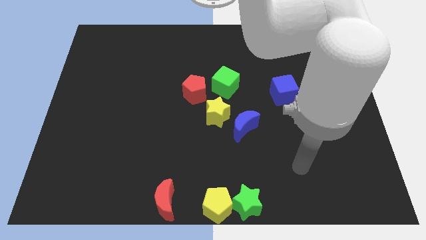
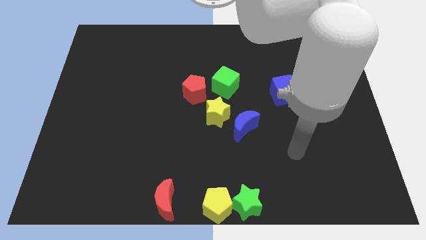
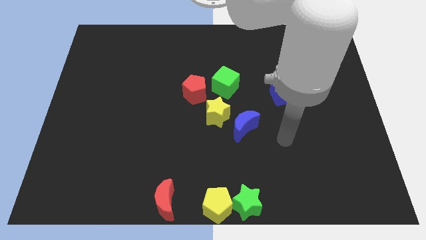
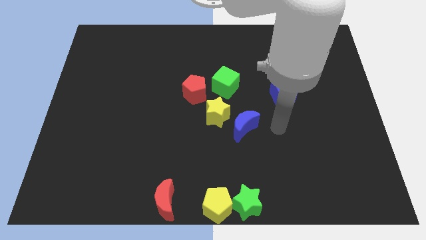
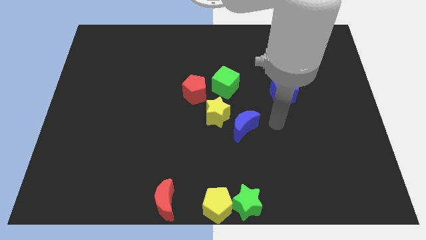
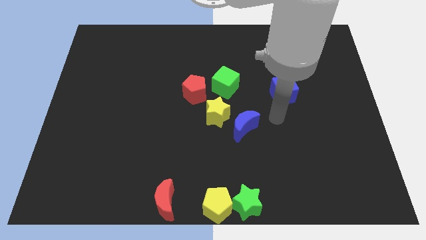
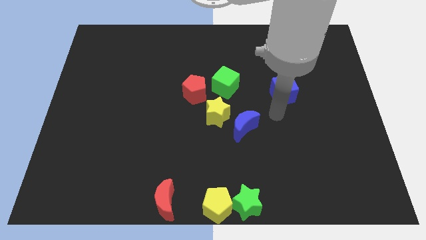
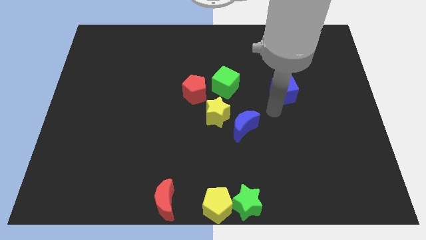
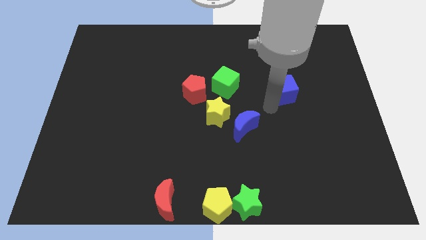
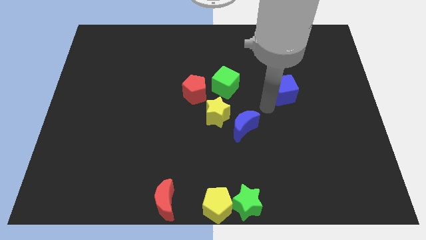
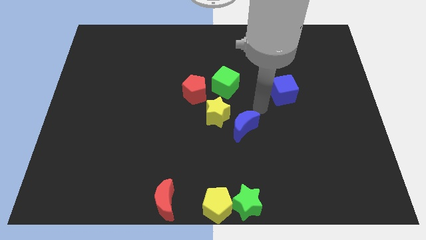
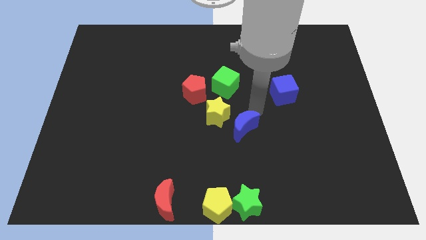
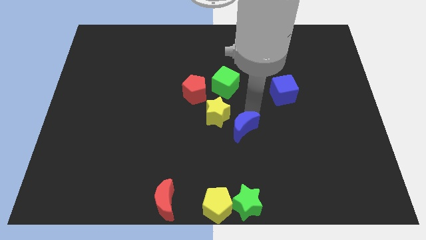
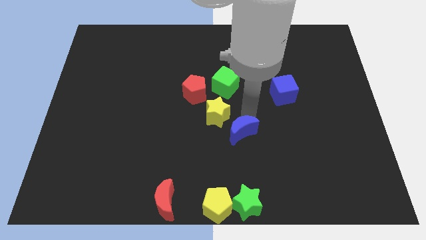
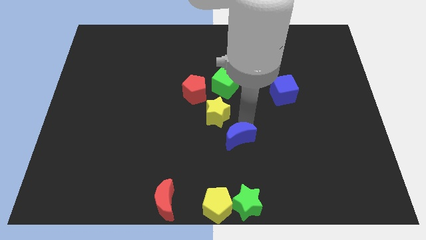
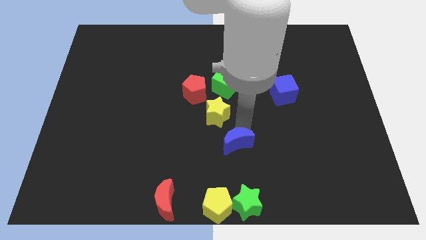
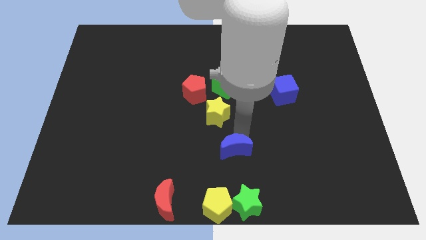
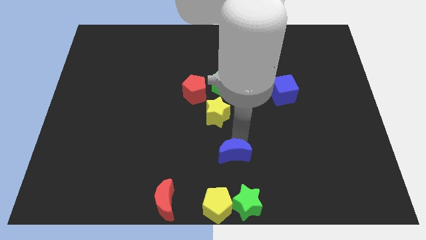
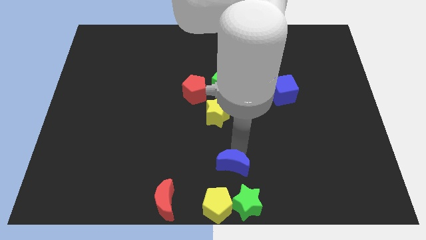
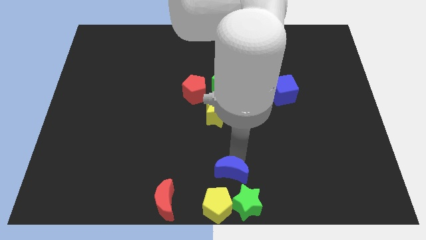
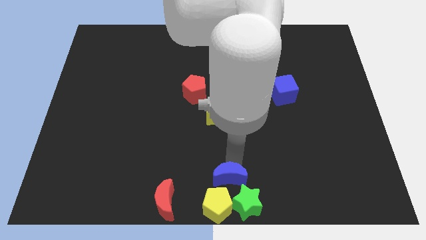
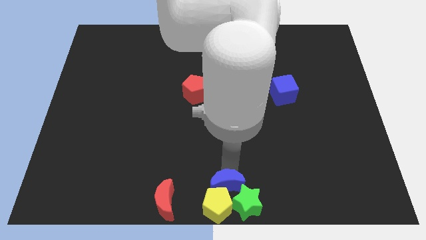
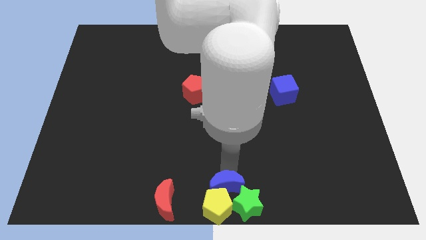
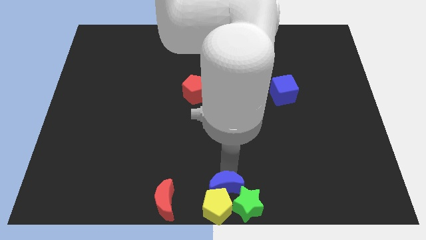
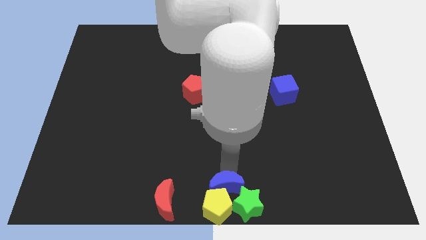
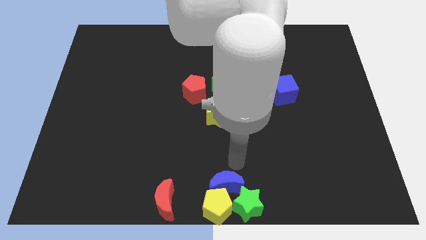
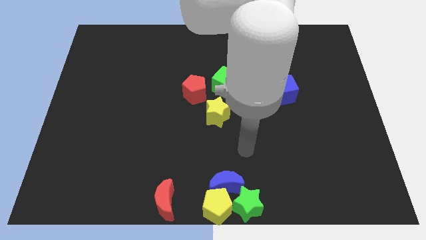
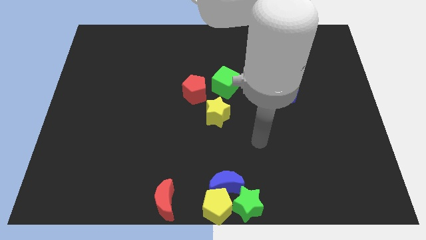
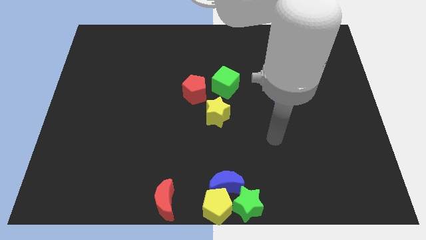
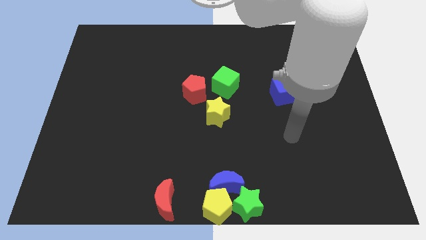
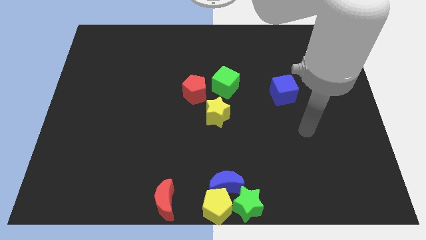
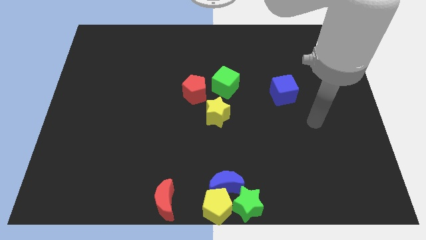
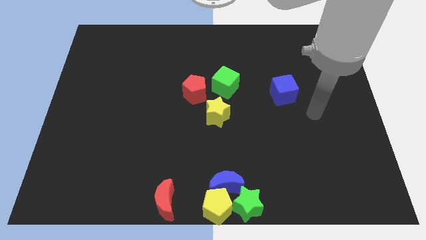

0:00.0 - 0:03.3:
place the blue moon above the green star and yellow pentagon

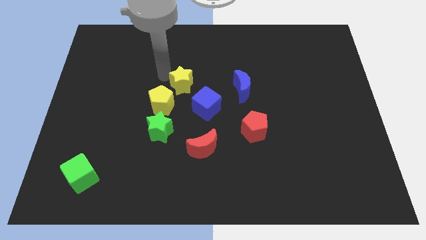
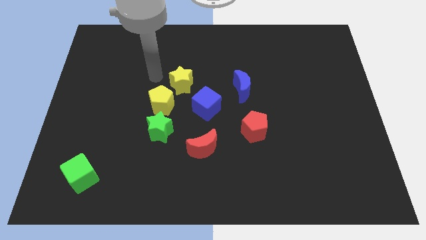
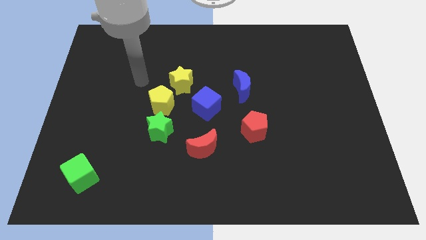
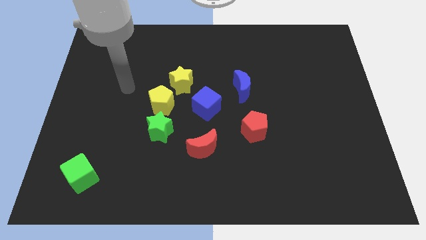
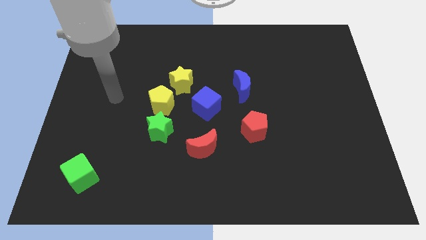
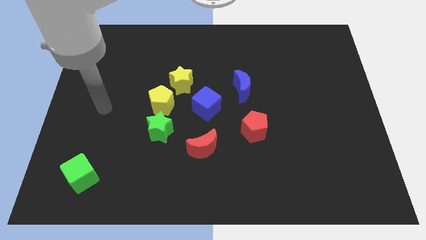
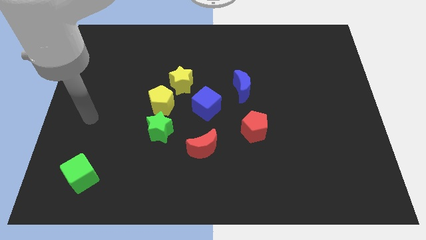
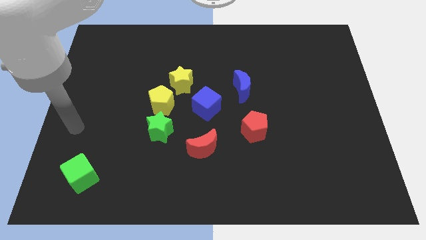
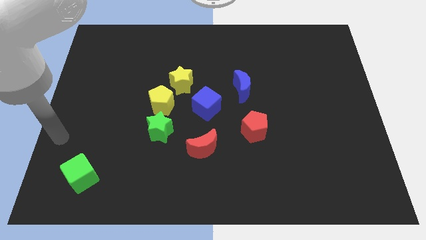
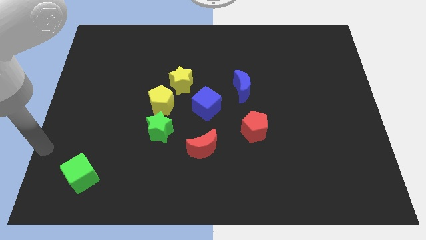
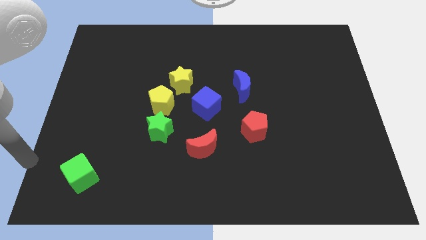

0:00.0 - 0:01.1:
go away from the yellow star

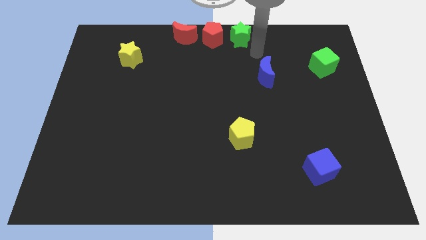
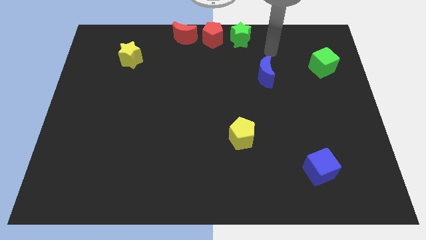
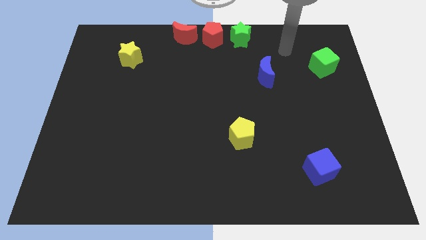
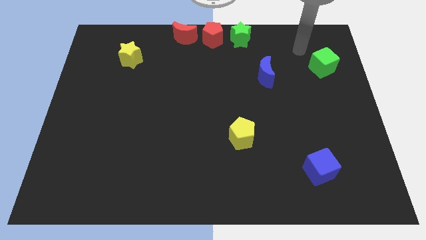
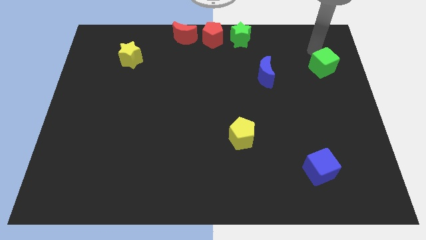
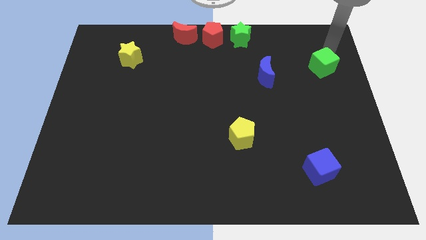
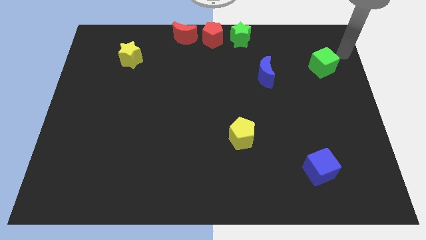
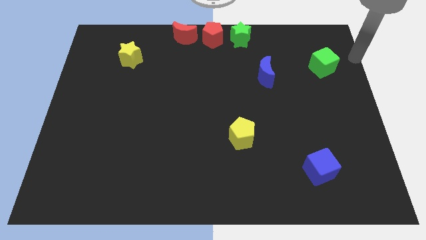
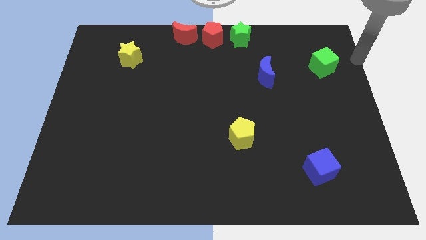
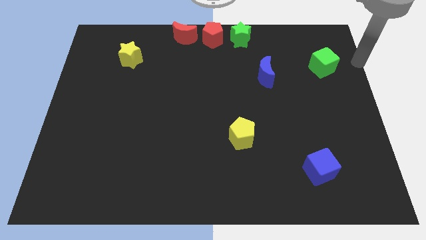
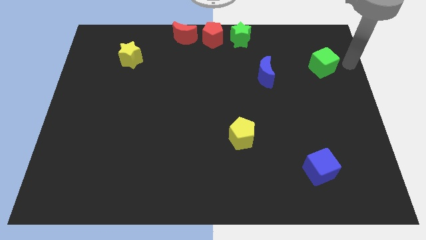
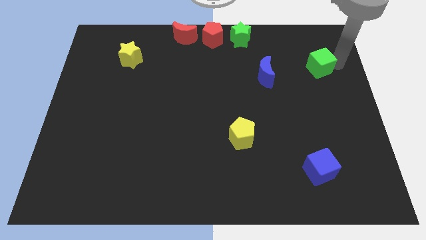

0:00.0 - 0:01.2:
move your arm towards the green cube

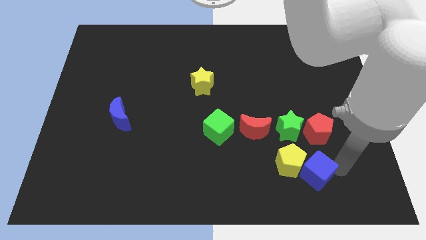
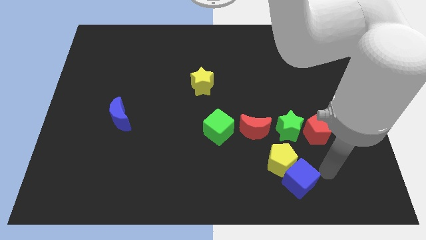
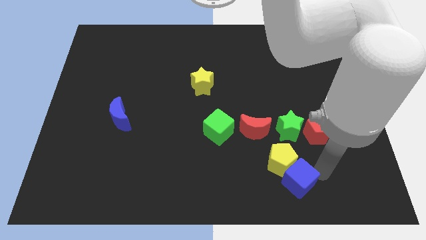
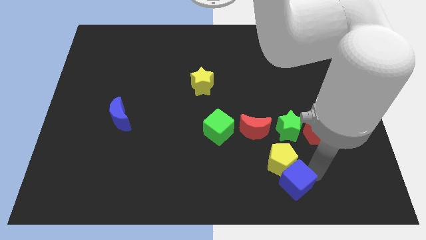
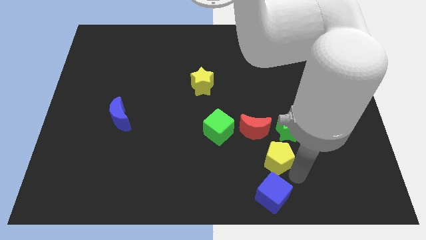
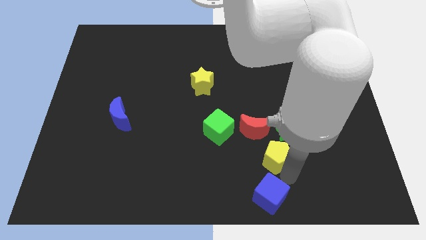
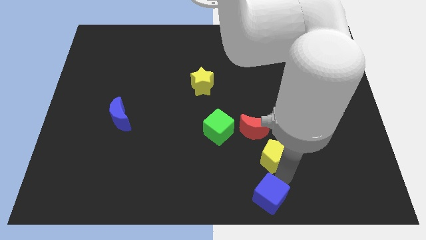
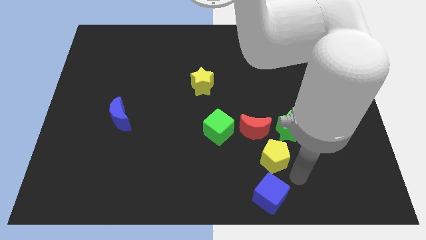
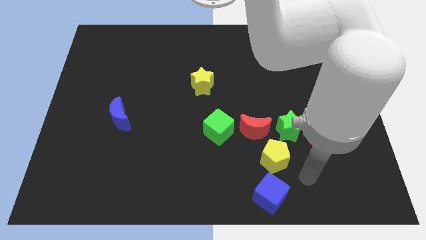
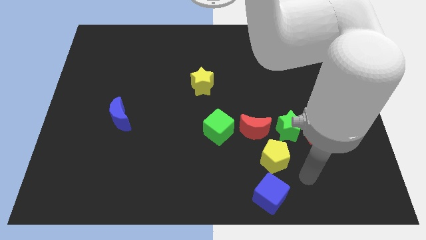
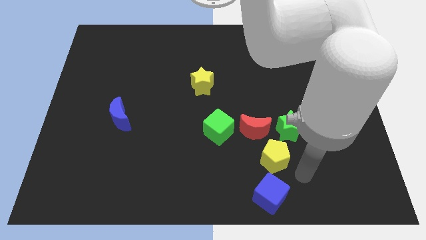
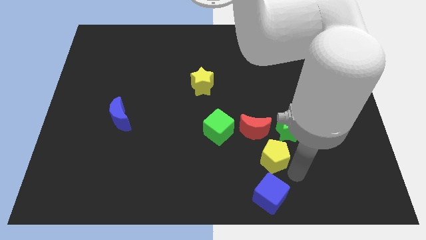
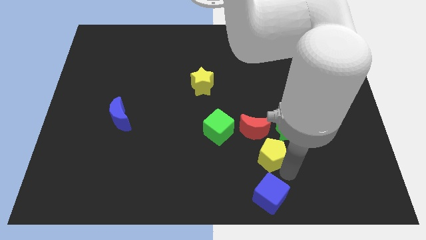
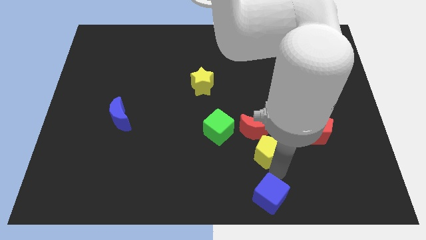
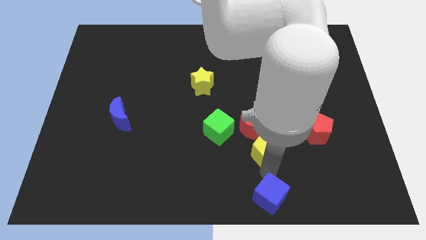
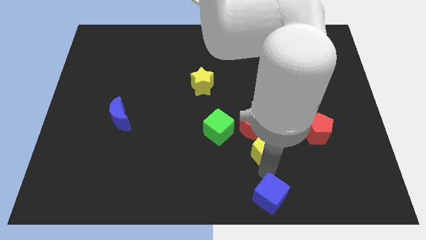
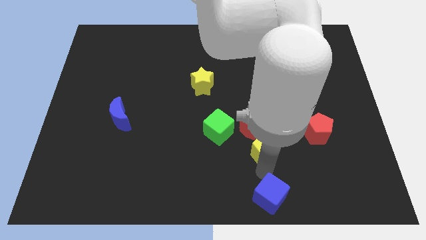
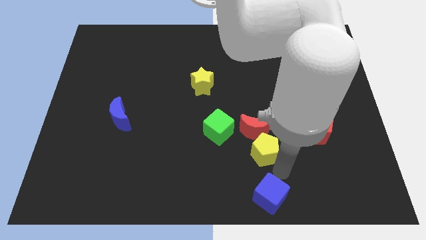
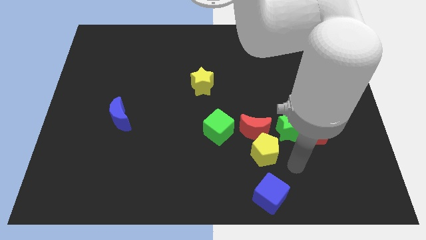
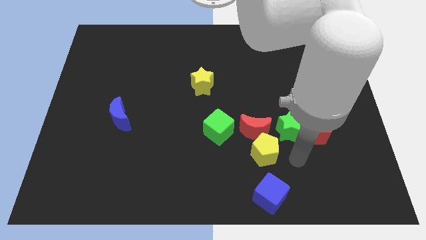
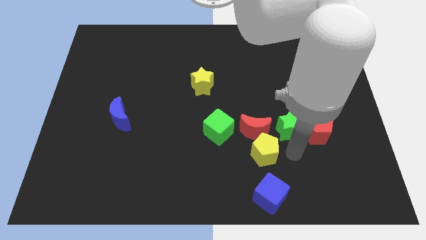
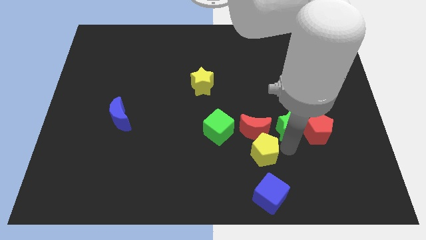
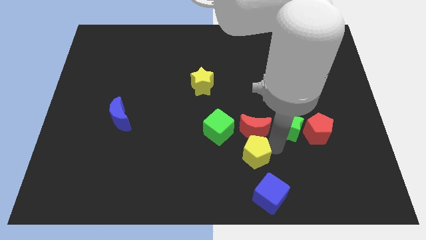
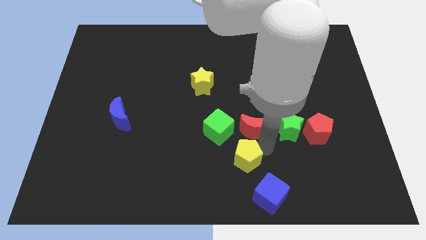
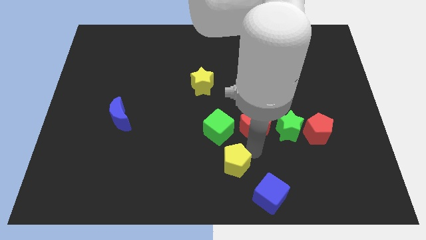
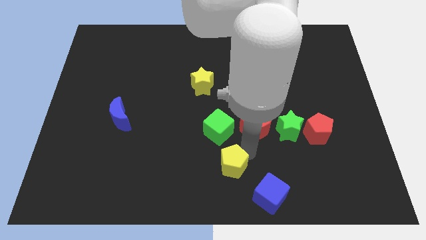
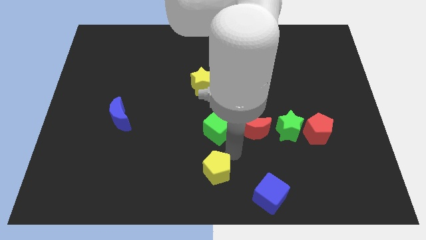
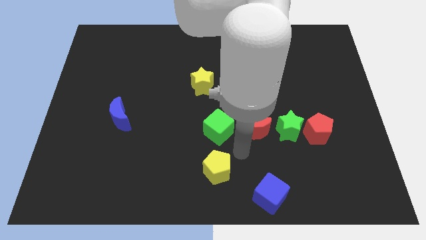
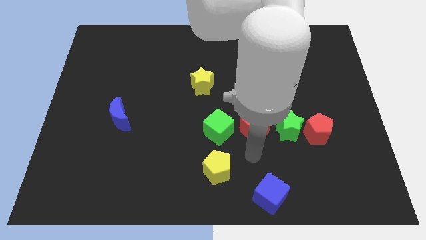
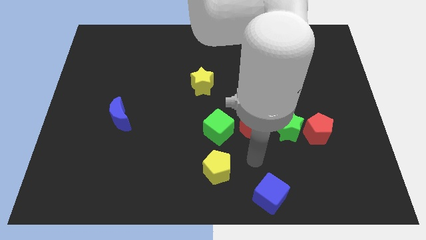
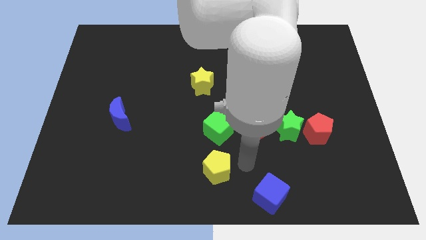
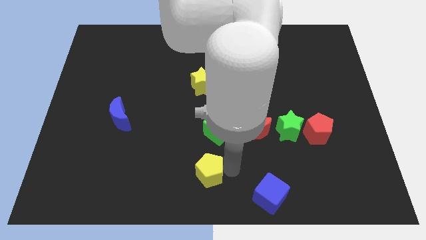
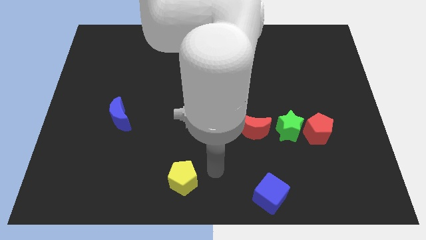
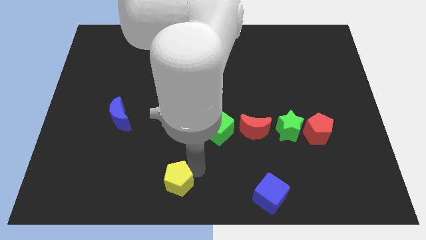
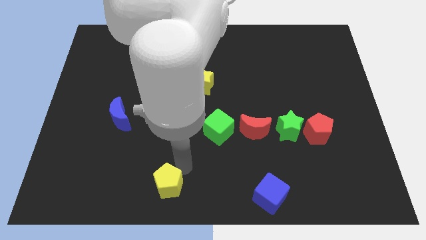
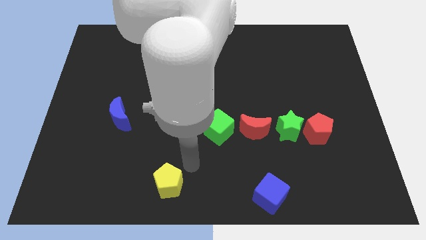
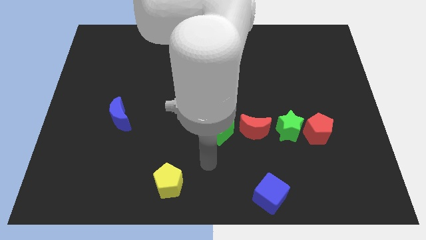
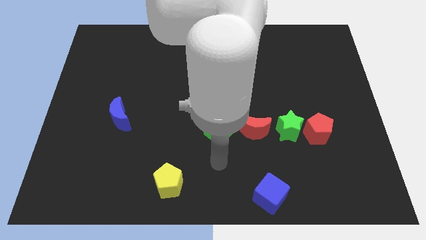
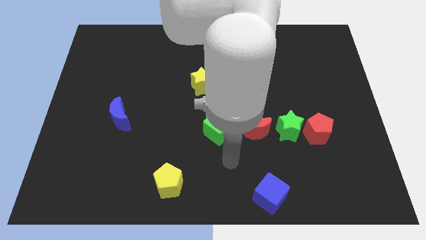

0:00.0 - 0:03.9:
separate the blue cube and yellow pentagon
